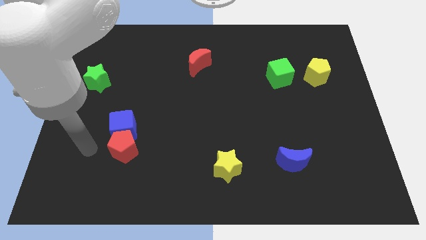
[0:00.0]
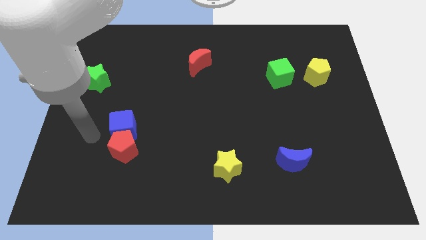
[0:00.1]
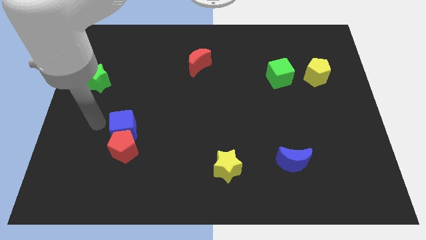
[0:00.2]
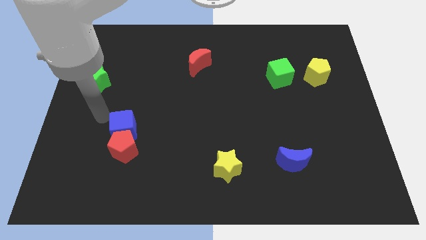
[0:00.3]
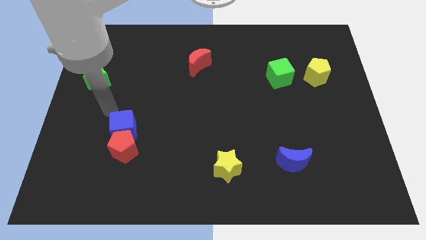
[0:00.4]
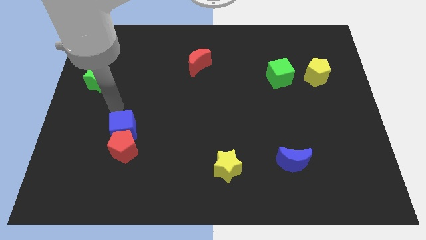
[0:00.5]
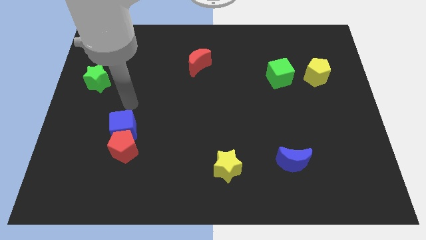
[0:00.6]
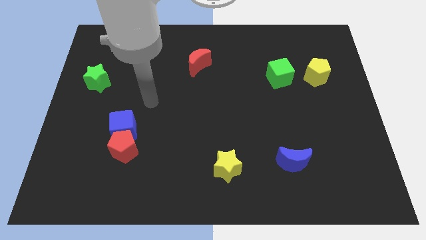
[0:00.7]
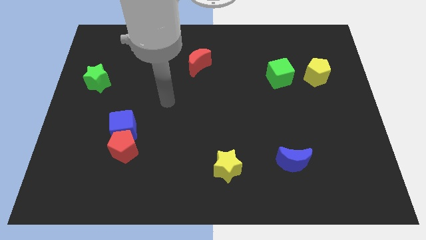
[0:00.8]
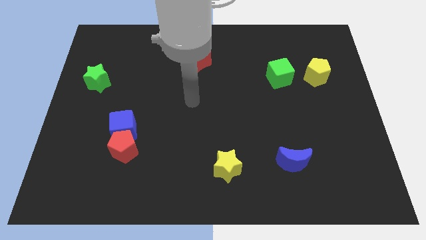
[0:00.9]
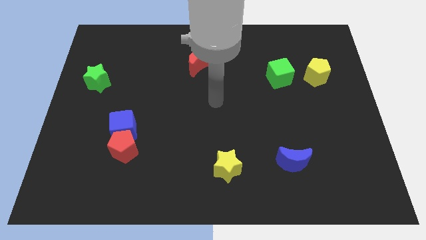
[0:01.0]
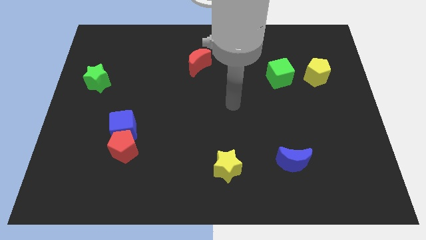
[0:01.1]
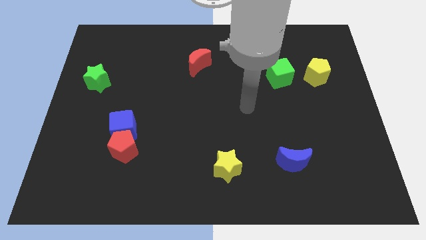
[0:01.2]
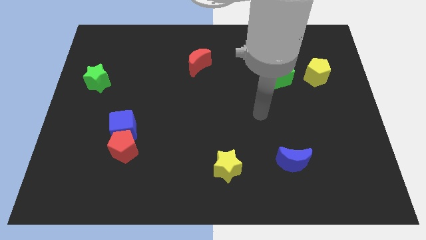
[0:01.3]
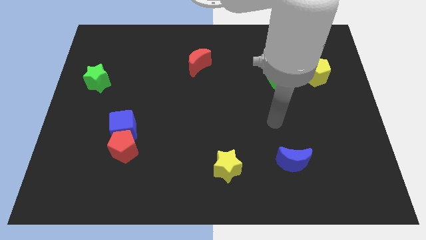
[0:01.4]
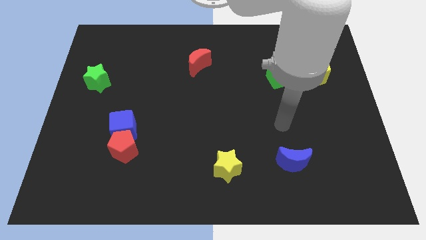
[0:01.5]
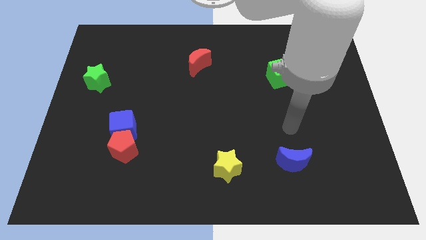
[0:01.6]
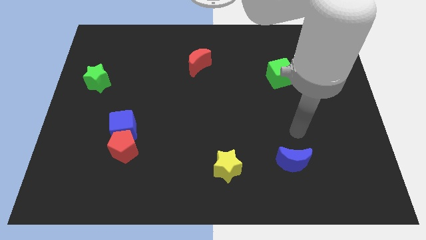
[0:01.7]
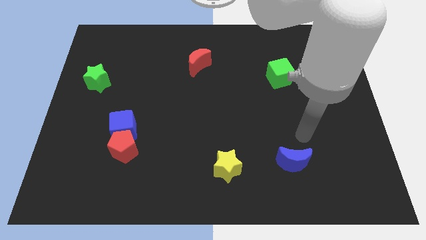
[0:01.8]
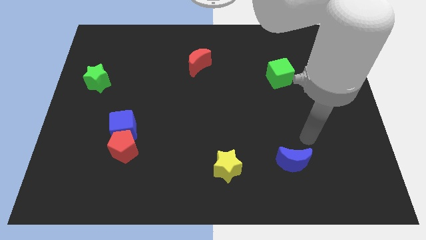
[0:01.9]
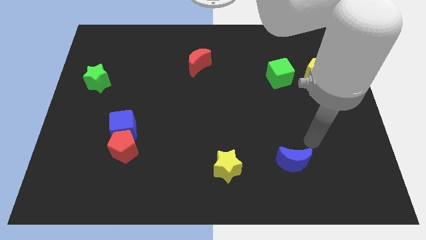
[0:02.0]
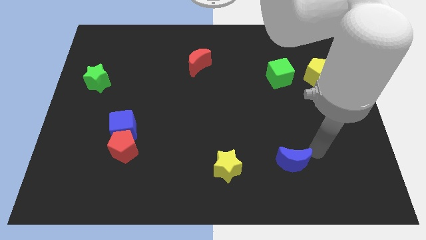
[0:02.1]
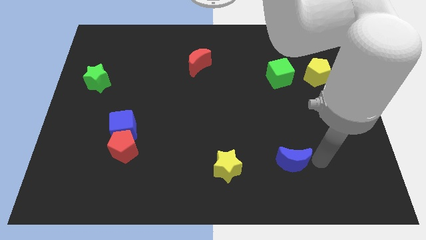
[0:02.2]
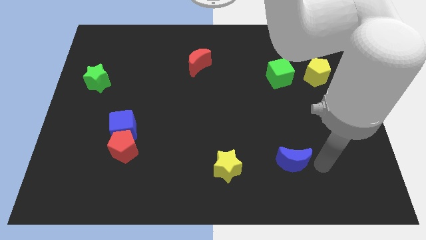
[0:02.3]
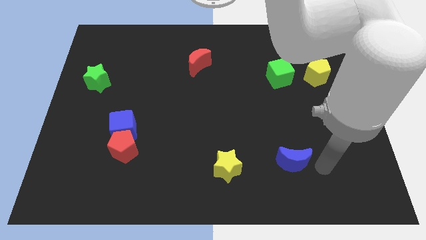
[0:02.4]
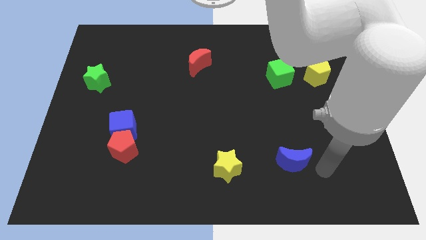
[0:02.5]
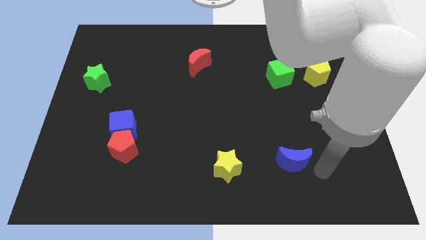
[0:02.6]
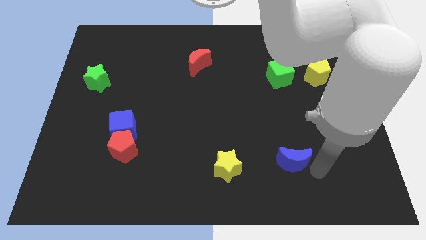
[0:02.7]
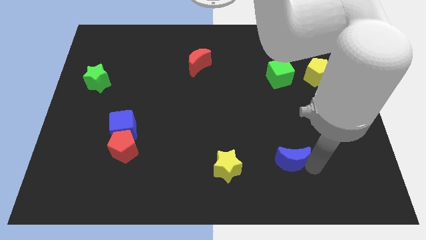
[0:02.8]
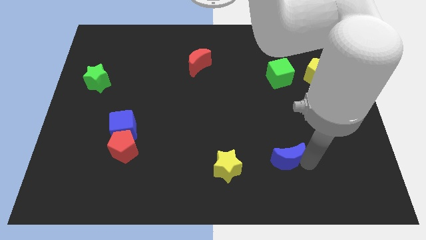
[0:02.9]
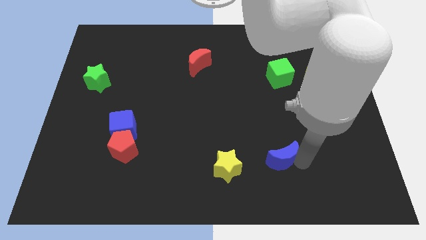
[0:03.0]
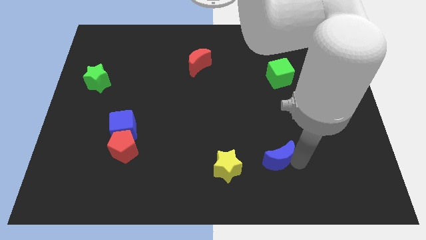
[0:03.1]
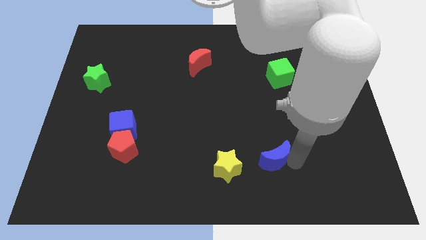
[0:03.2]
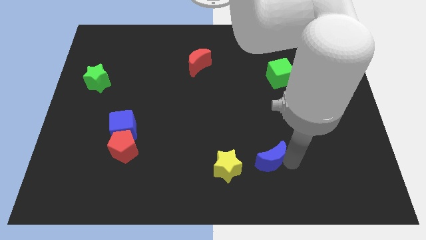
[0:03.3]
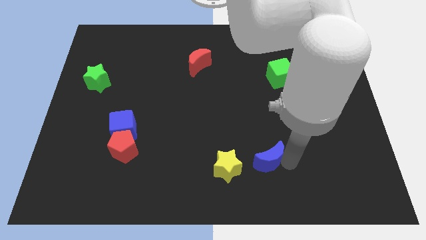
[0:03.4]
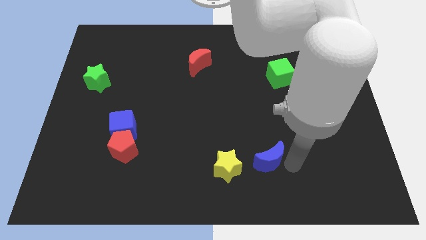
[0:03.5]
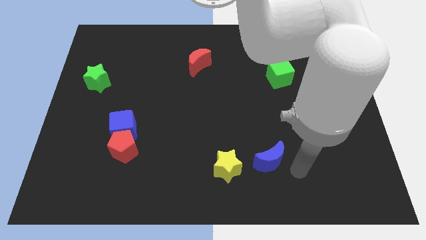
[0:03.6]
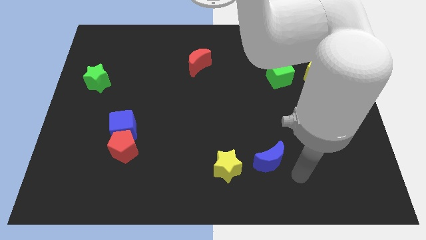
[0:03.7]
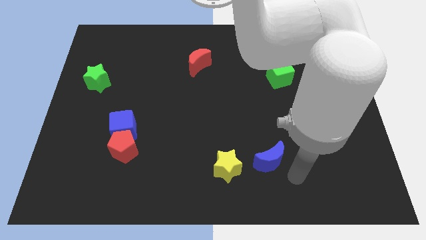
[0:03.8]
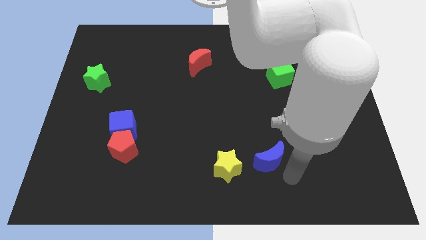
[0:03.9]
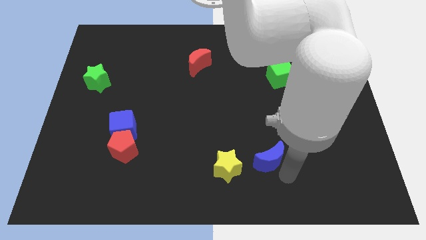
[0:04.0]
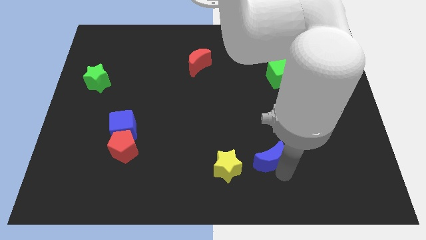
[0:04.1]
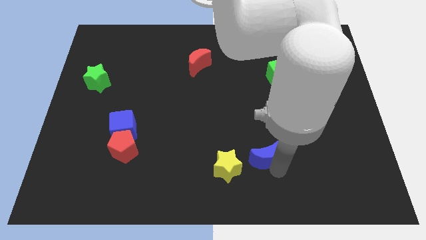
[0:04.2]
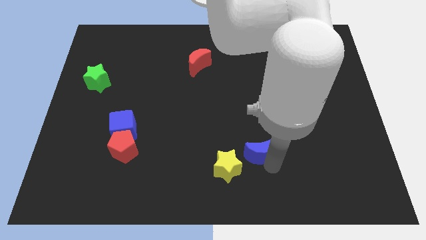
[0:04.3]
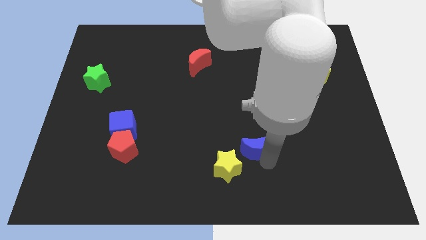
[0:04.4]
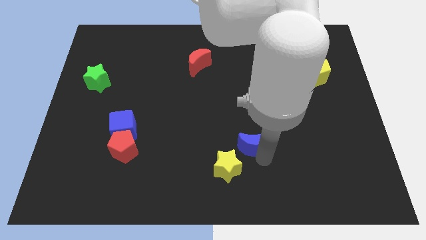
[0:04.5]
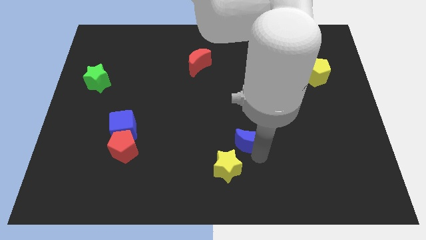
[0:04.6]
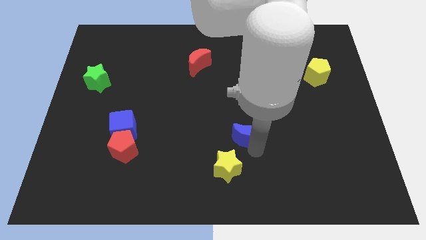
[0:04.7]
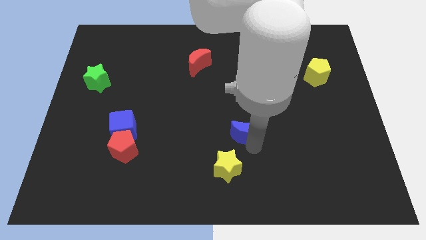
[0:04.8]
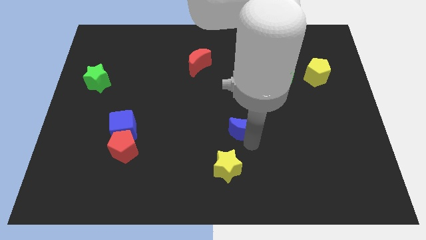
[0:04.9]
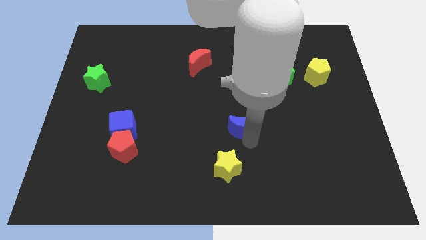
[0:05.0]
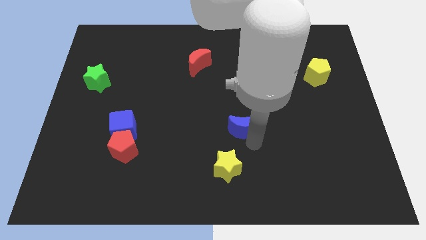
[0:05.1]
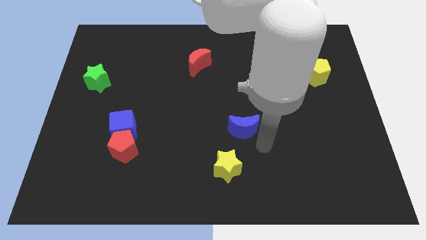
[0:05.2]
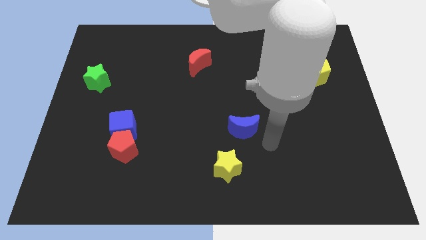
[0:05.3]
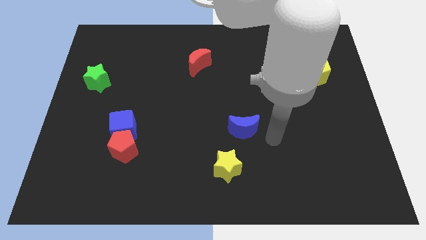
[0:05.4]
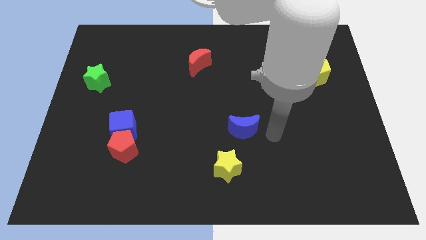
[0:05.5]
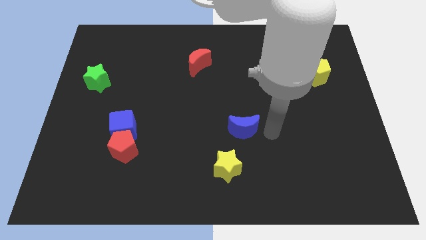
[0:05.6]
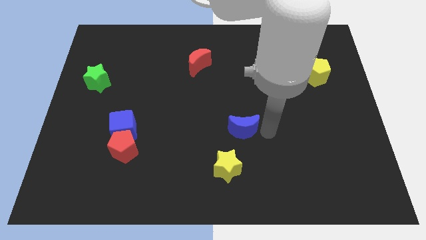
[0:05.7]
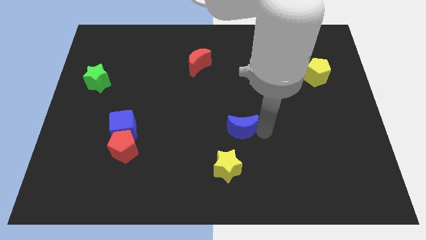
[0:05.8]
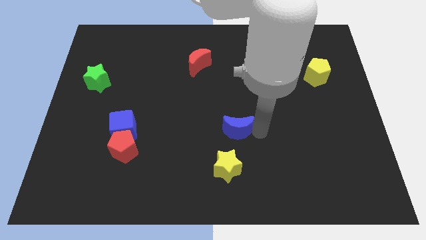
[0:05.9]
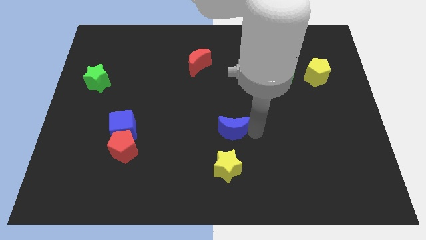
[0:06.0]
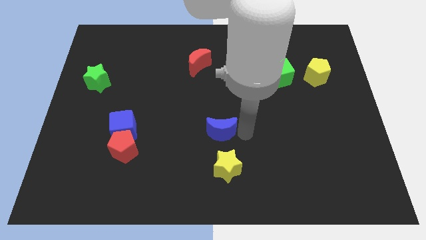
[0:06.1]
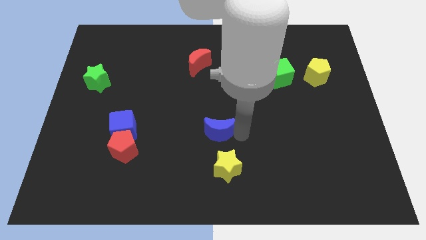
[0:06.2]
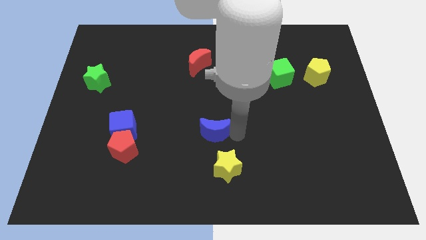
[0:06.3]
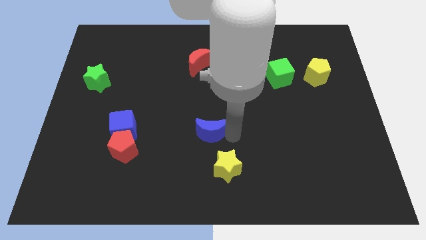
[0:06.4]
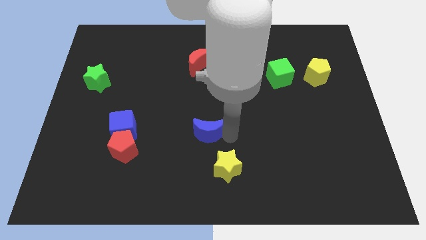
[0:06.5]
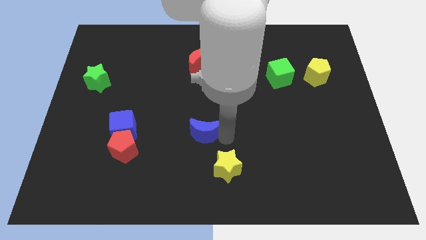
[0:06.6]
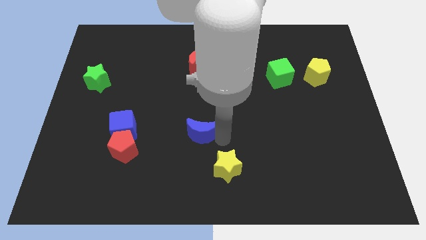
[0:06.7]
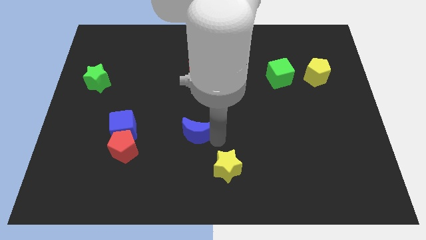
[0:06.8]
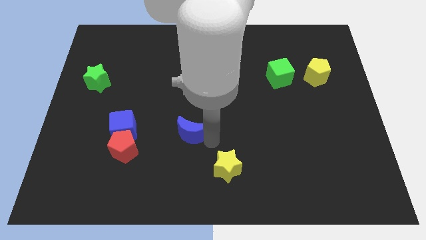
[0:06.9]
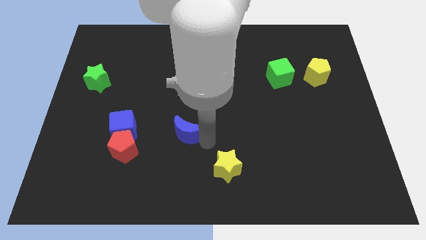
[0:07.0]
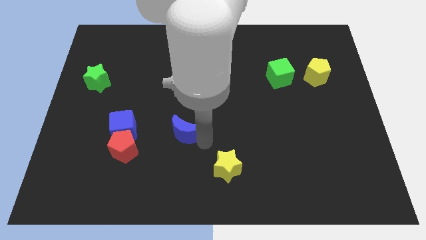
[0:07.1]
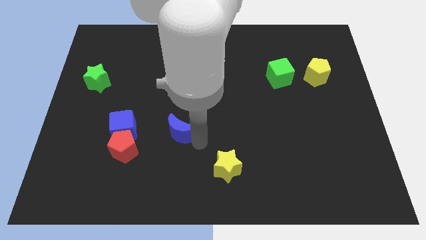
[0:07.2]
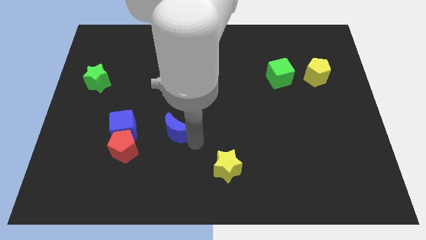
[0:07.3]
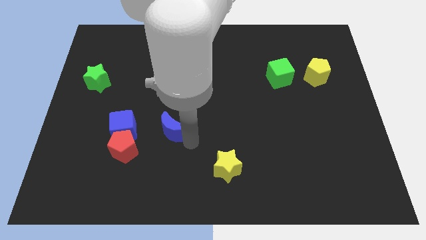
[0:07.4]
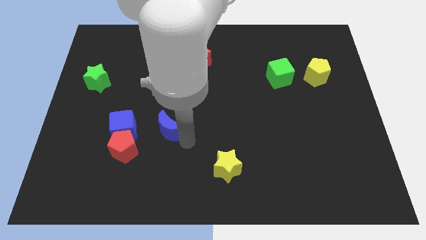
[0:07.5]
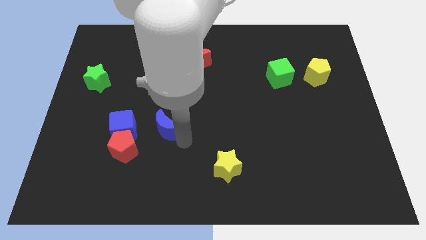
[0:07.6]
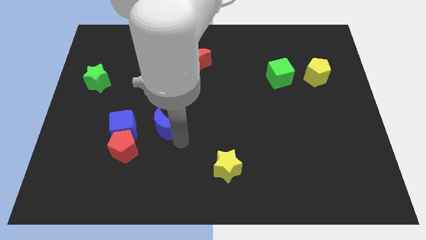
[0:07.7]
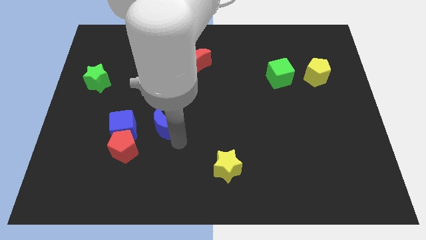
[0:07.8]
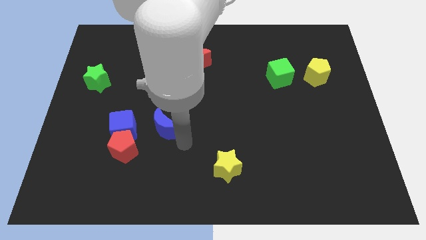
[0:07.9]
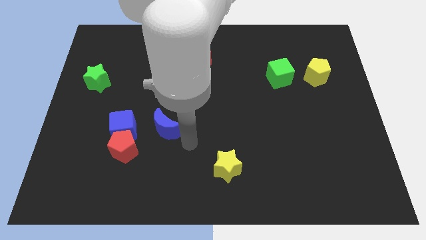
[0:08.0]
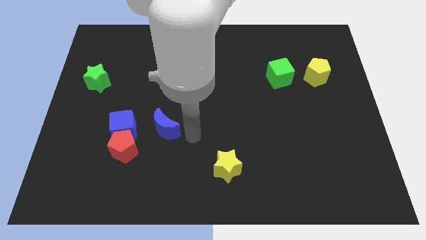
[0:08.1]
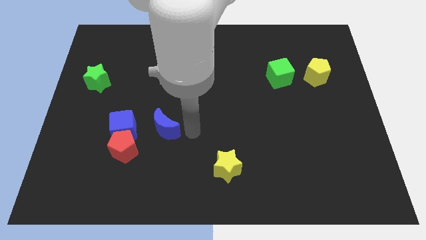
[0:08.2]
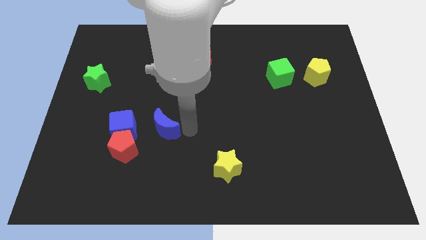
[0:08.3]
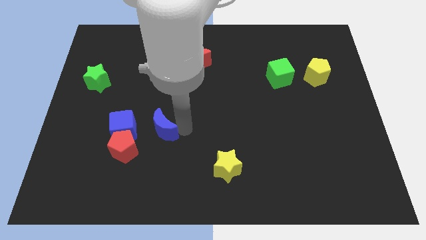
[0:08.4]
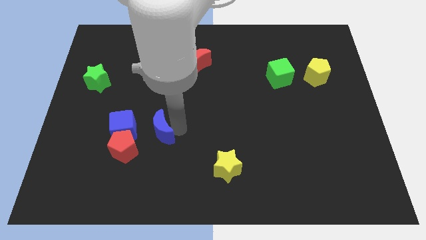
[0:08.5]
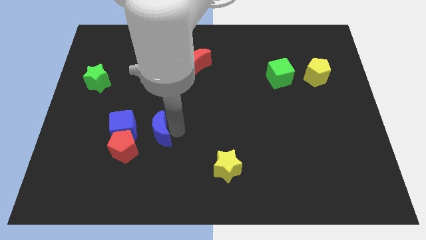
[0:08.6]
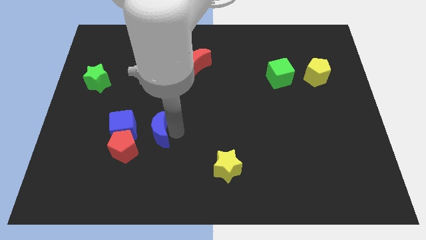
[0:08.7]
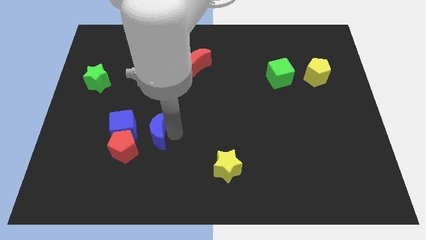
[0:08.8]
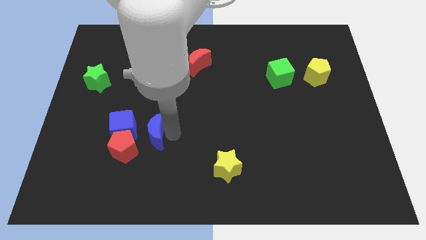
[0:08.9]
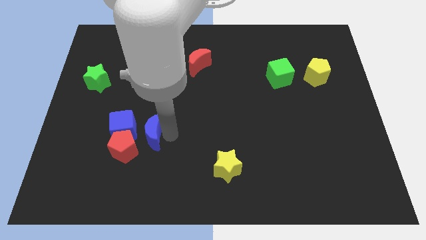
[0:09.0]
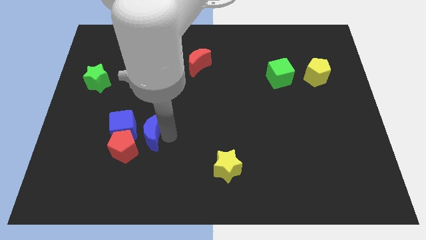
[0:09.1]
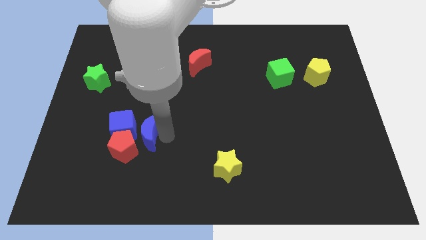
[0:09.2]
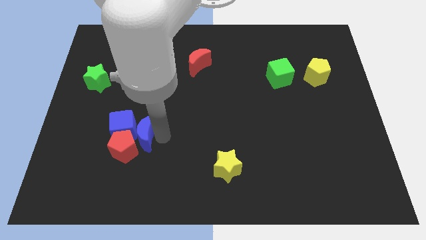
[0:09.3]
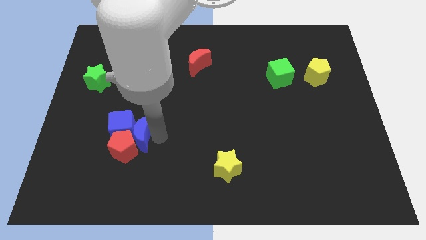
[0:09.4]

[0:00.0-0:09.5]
push the blue moon towards the blue cube
